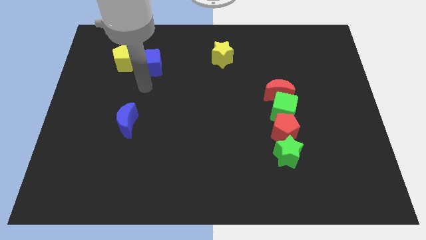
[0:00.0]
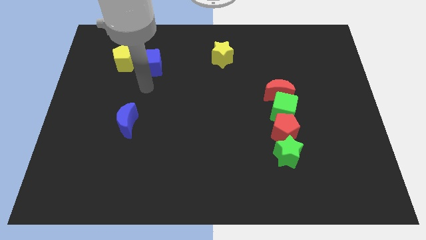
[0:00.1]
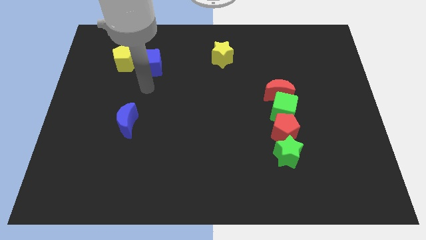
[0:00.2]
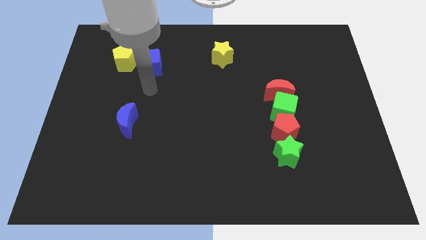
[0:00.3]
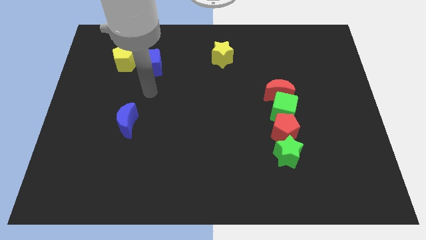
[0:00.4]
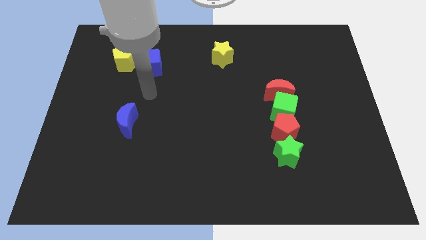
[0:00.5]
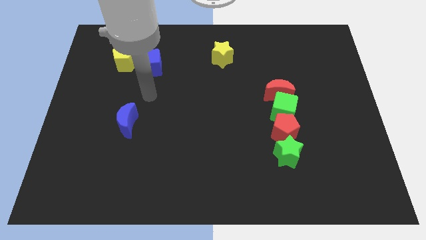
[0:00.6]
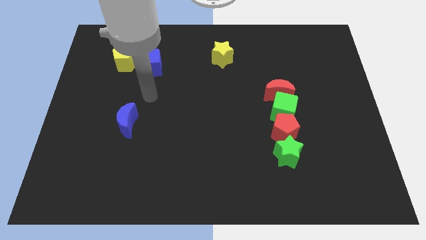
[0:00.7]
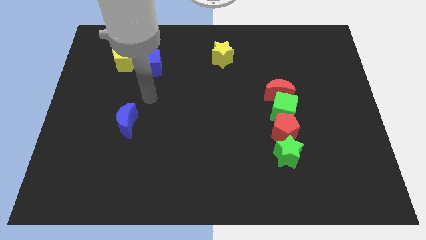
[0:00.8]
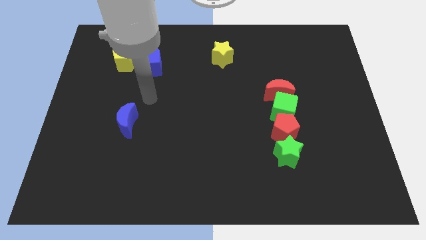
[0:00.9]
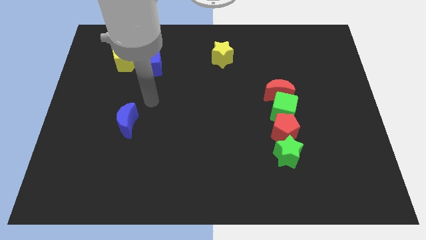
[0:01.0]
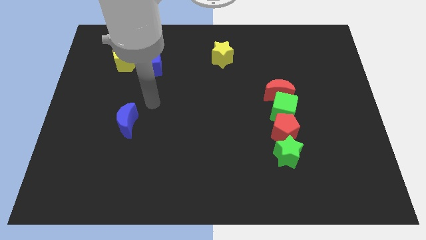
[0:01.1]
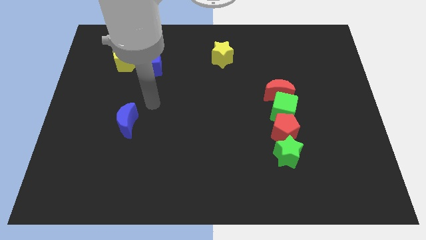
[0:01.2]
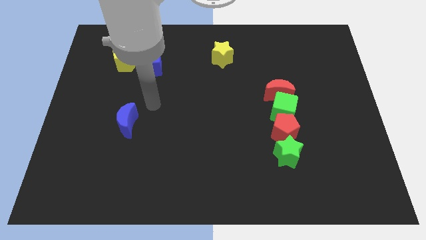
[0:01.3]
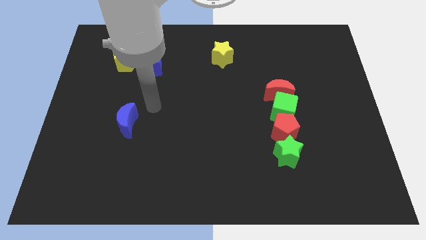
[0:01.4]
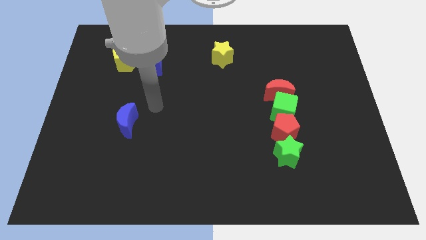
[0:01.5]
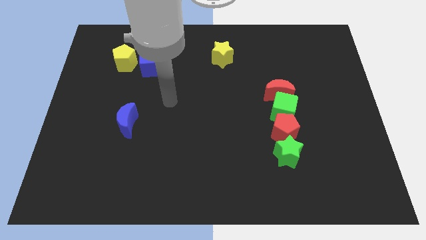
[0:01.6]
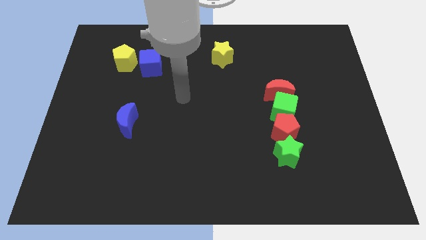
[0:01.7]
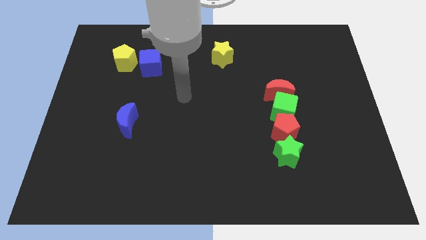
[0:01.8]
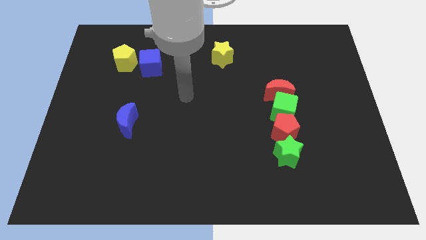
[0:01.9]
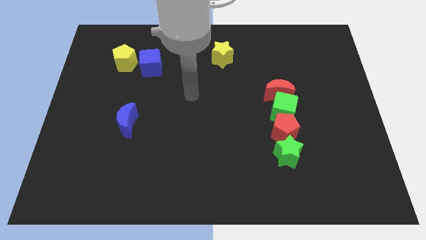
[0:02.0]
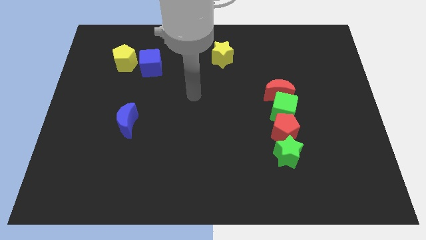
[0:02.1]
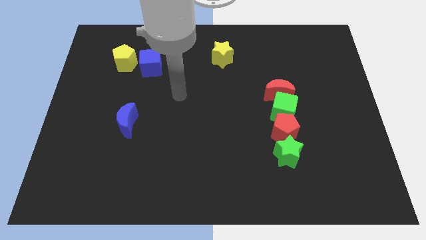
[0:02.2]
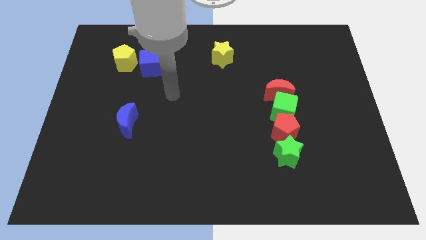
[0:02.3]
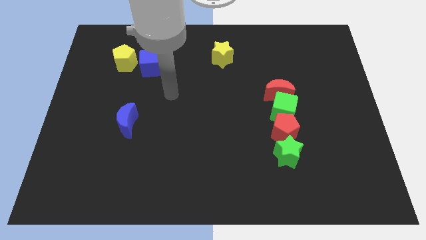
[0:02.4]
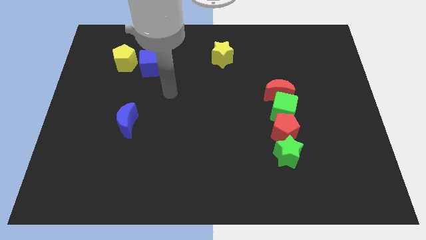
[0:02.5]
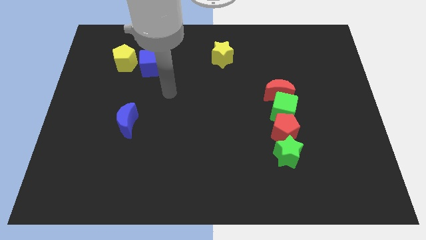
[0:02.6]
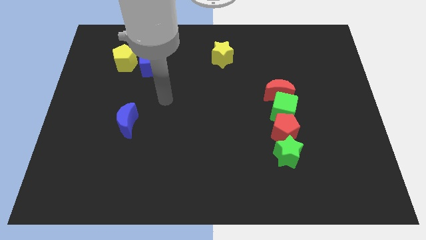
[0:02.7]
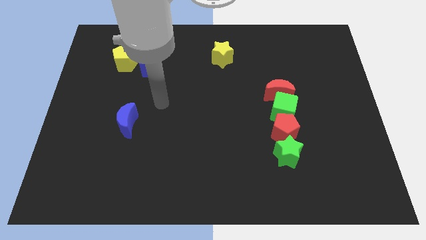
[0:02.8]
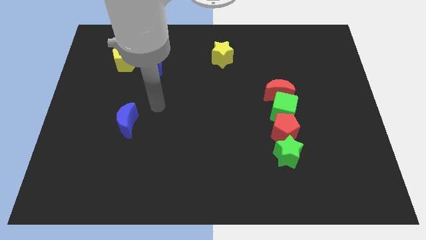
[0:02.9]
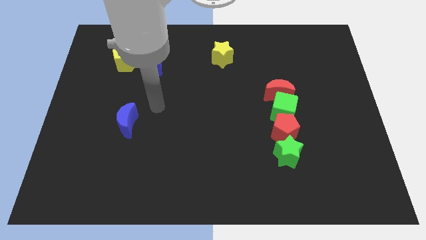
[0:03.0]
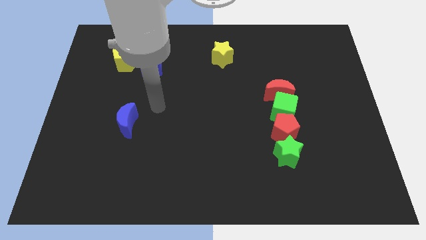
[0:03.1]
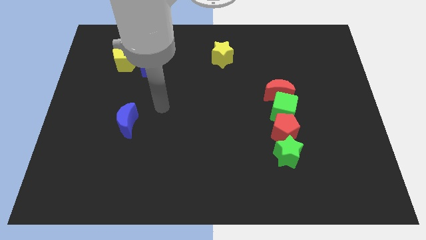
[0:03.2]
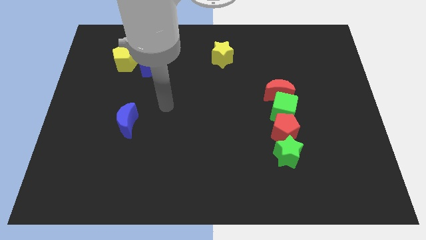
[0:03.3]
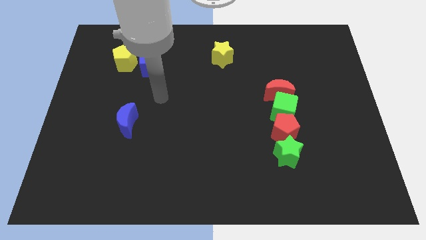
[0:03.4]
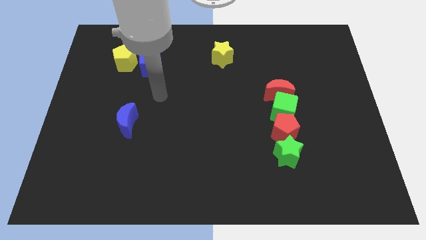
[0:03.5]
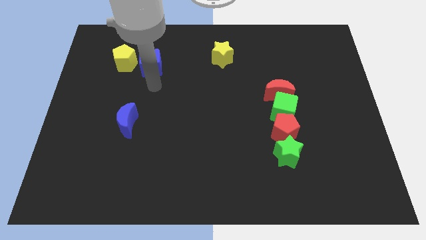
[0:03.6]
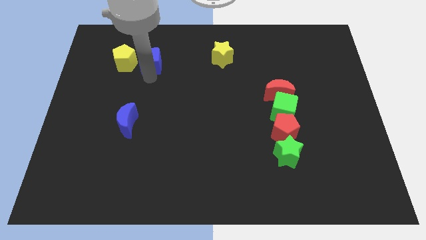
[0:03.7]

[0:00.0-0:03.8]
move your arm from left to right

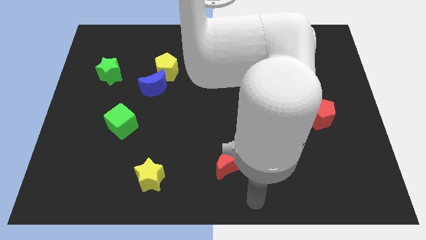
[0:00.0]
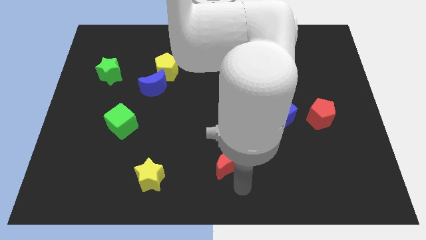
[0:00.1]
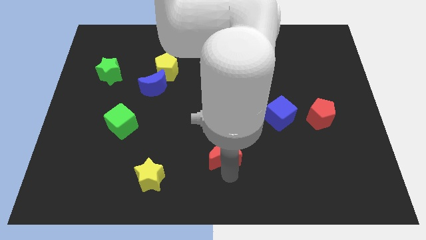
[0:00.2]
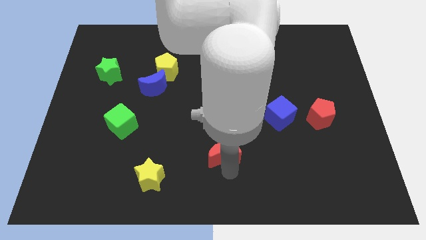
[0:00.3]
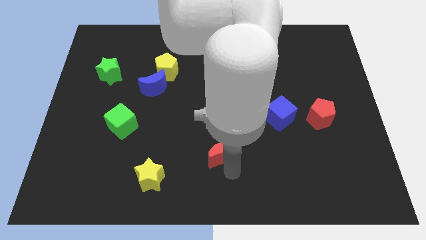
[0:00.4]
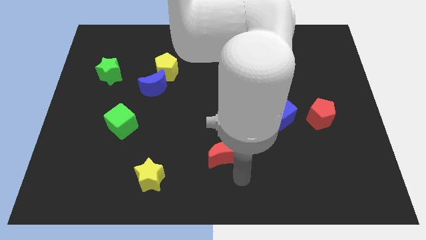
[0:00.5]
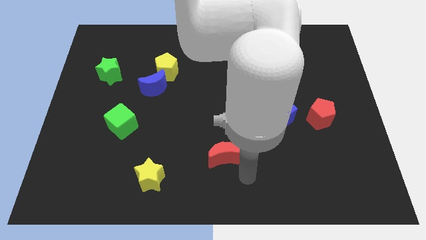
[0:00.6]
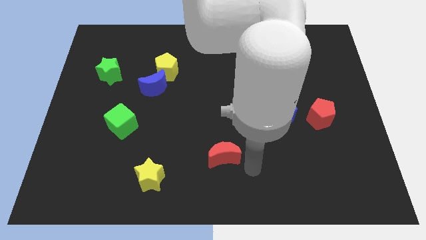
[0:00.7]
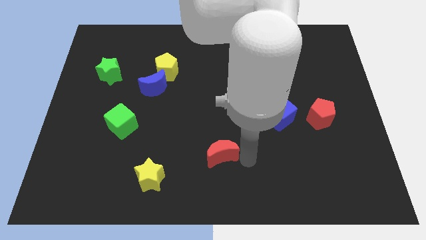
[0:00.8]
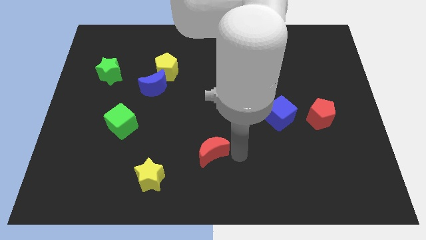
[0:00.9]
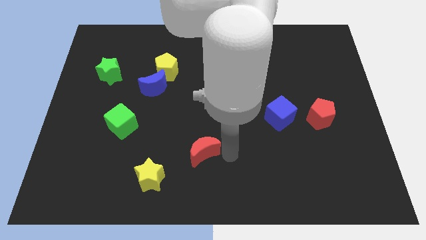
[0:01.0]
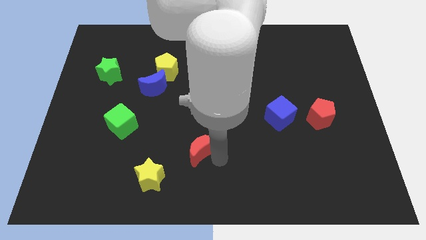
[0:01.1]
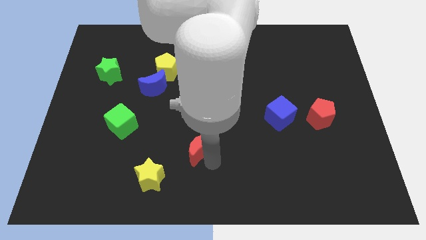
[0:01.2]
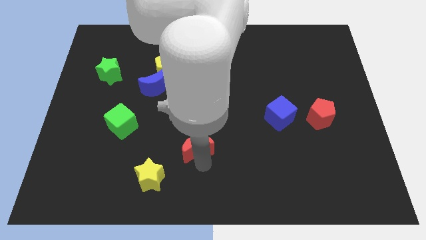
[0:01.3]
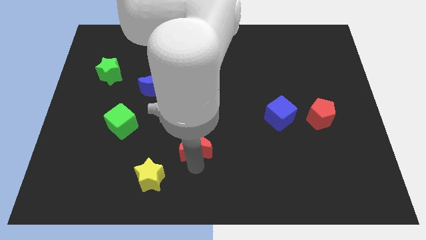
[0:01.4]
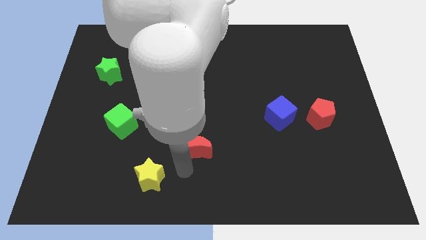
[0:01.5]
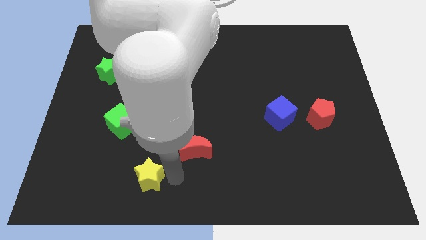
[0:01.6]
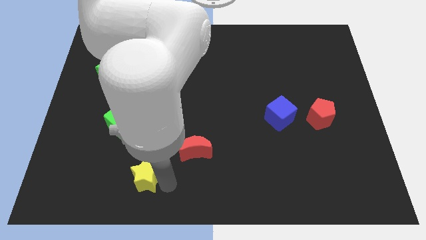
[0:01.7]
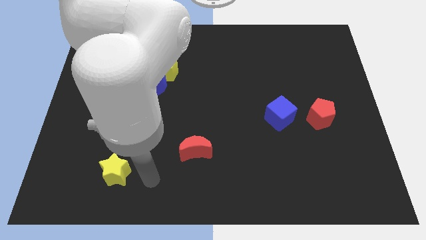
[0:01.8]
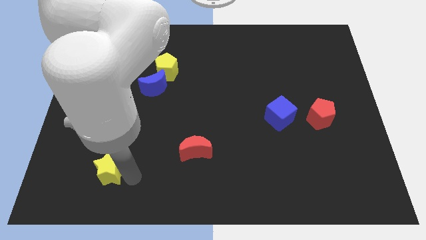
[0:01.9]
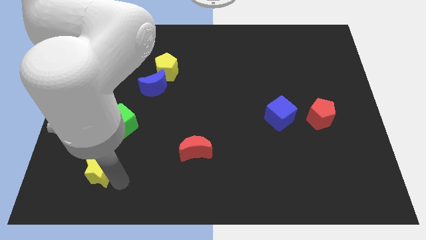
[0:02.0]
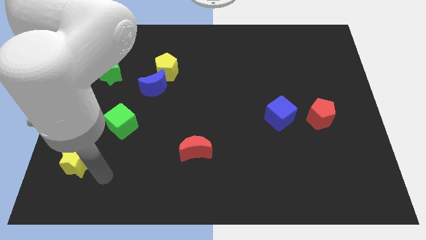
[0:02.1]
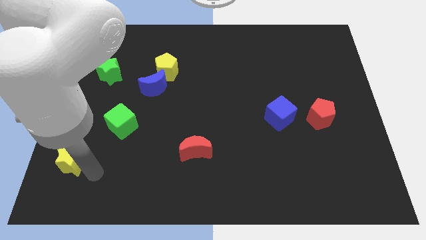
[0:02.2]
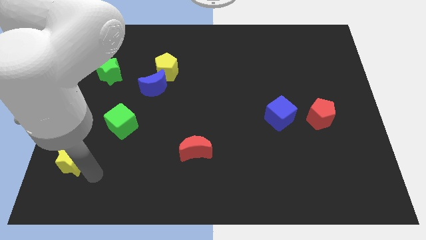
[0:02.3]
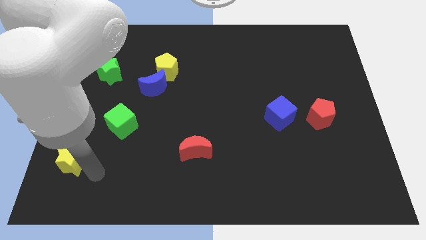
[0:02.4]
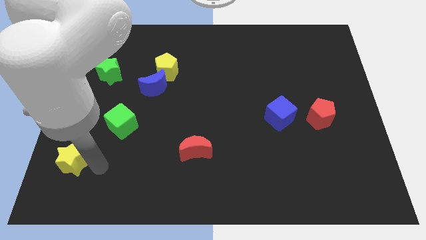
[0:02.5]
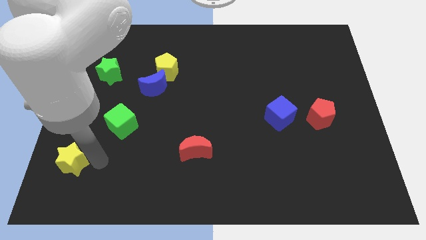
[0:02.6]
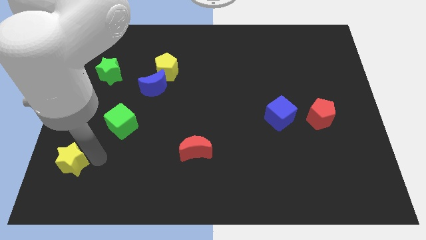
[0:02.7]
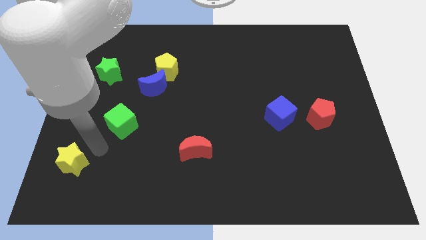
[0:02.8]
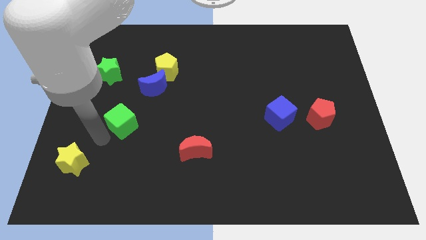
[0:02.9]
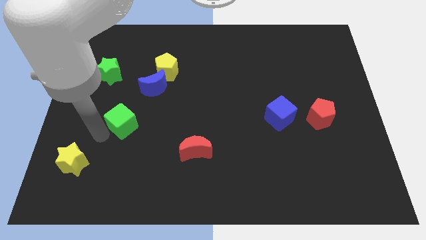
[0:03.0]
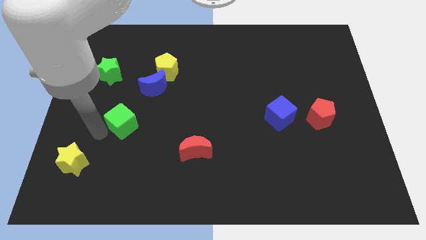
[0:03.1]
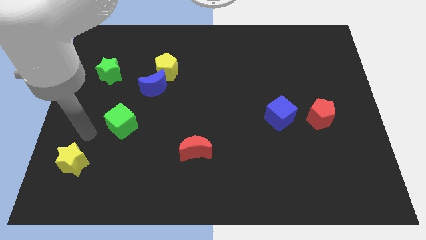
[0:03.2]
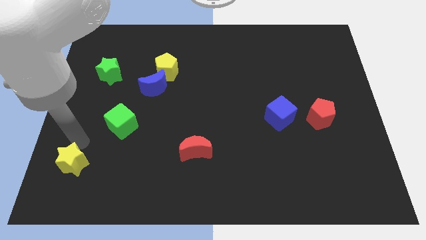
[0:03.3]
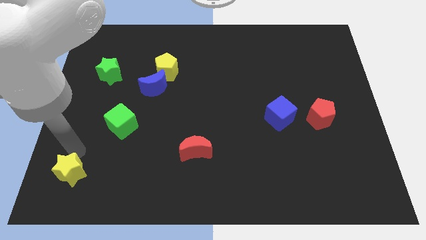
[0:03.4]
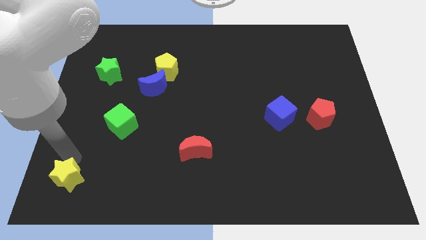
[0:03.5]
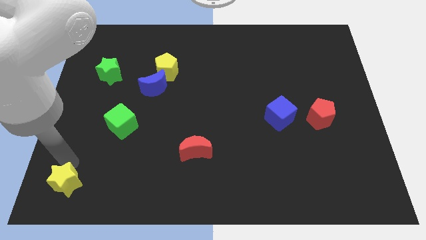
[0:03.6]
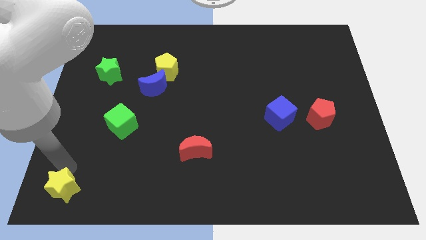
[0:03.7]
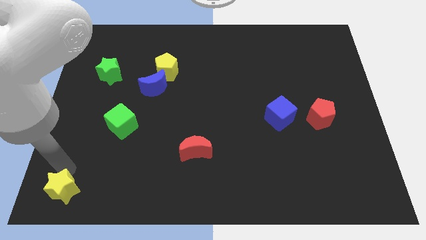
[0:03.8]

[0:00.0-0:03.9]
move the yellow star to the bottom left of the board

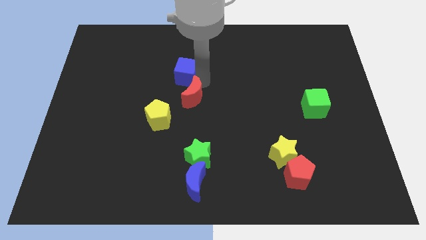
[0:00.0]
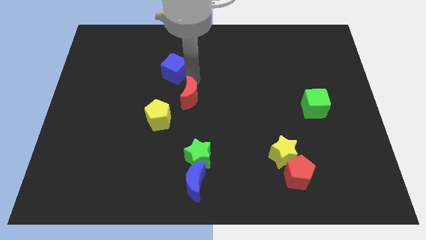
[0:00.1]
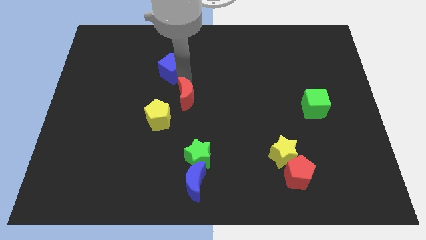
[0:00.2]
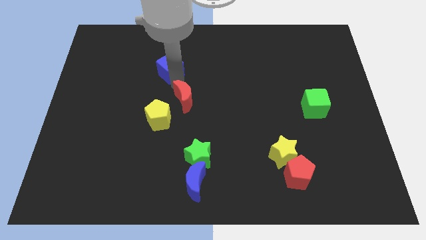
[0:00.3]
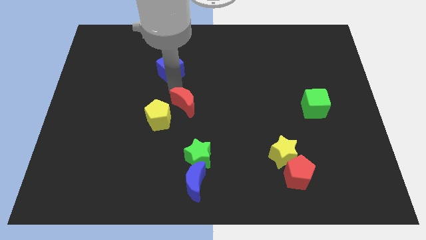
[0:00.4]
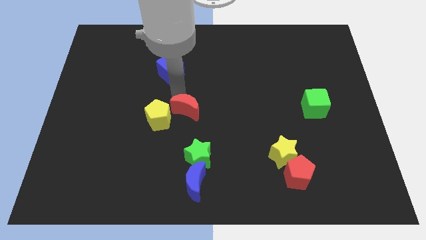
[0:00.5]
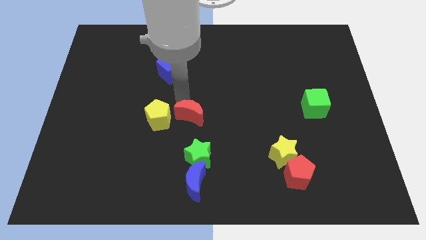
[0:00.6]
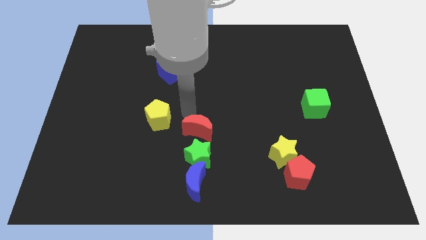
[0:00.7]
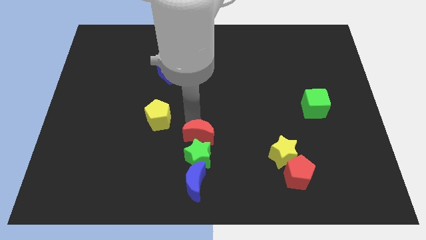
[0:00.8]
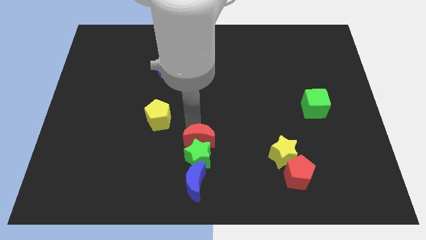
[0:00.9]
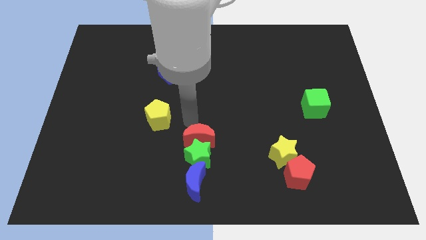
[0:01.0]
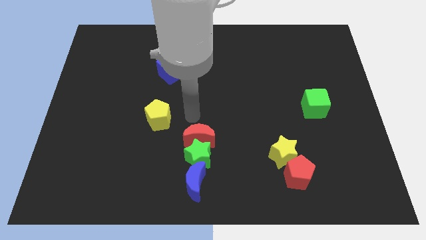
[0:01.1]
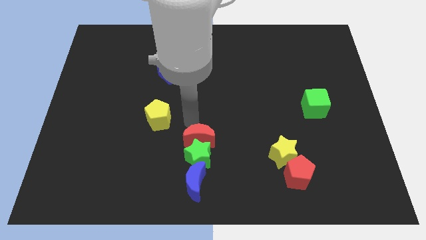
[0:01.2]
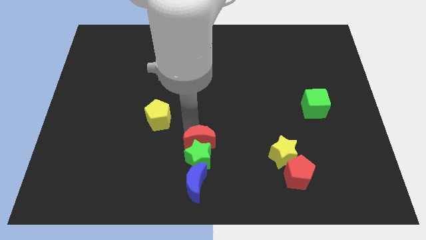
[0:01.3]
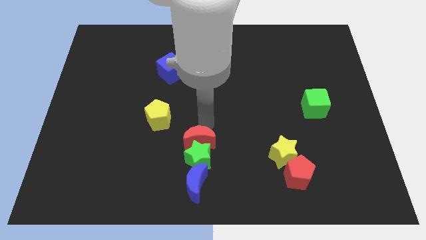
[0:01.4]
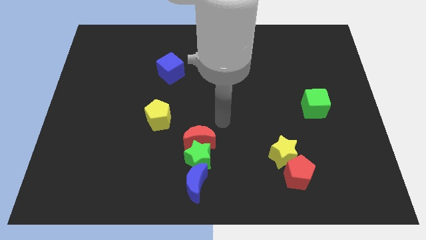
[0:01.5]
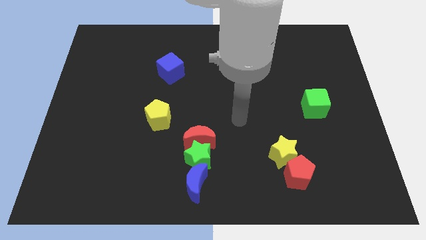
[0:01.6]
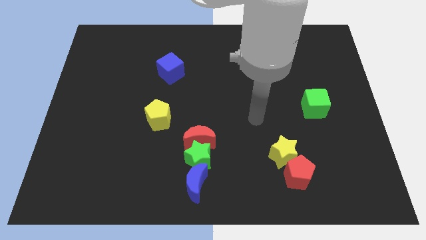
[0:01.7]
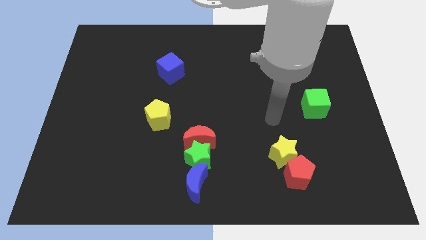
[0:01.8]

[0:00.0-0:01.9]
push the red moon into the green star
